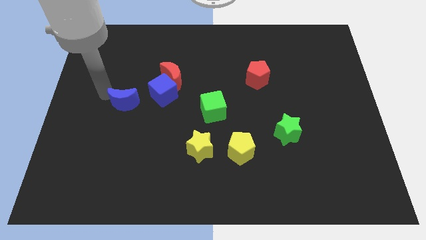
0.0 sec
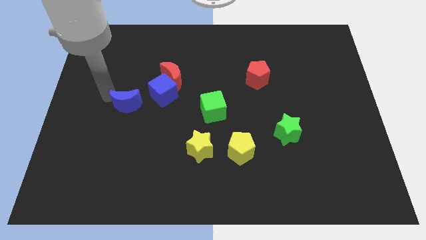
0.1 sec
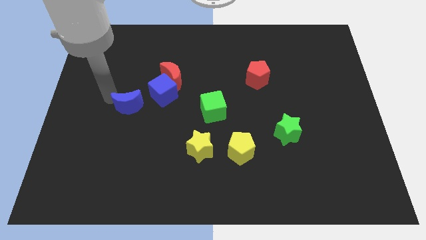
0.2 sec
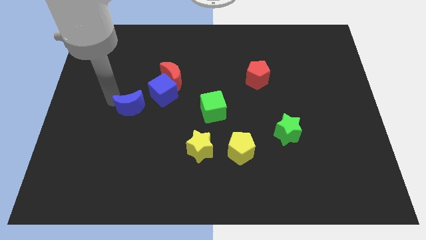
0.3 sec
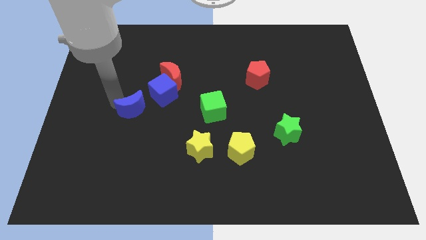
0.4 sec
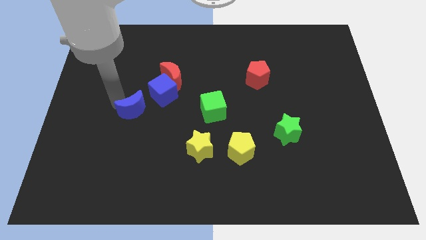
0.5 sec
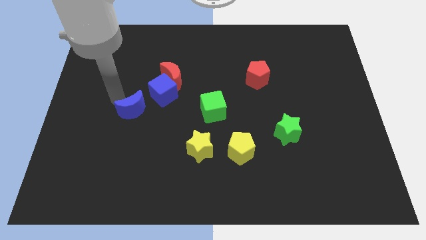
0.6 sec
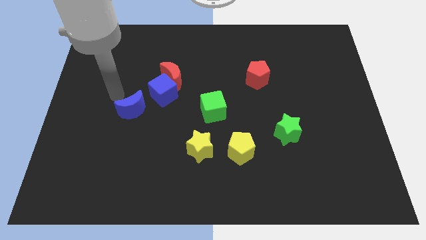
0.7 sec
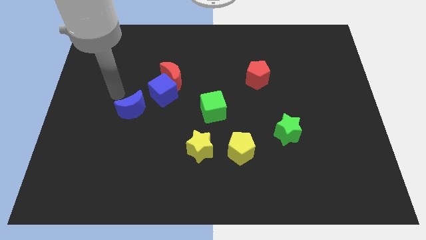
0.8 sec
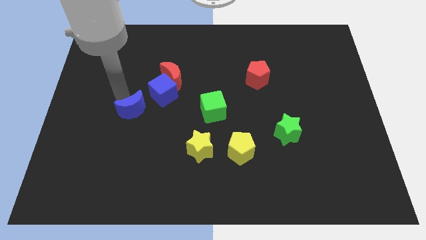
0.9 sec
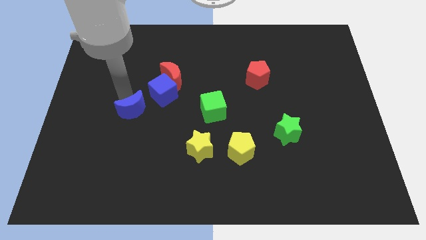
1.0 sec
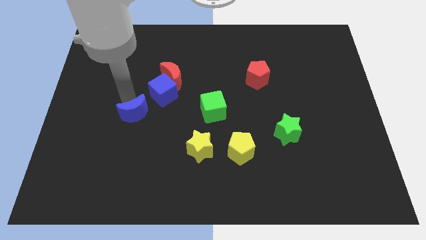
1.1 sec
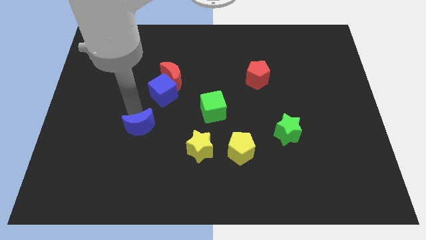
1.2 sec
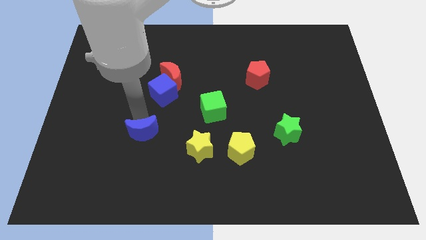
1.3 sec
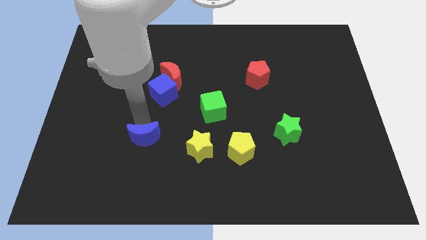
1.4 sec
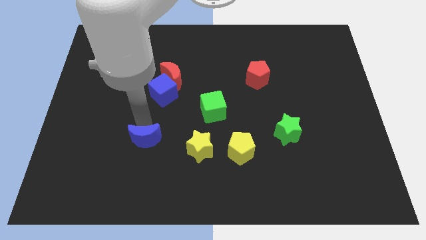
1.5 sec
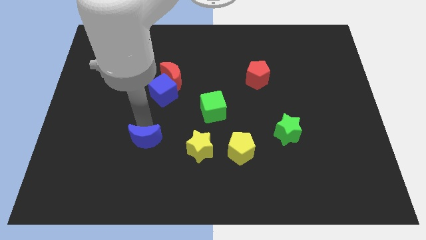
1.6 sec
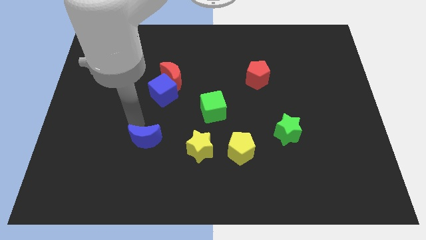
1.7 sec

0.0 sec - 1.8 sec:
move the blue crescent to the bottom of the blue cube

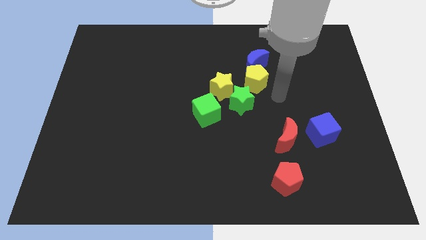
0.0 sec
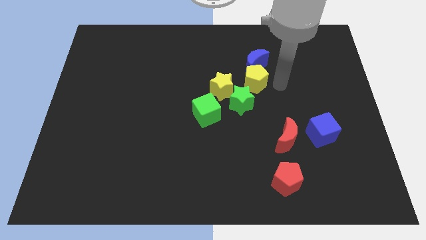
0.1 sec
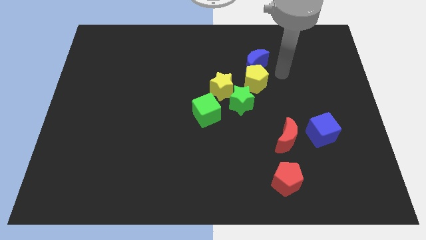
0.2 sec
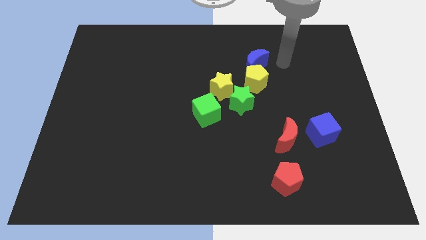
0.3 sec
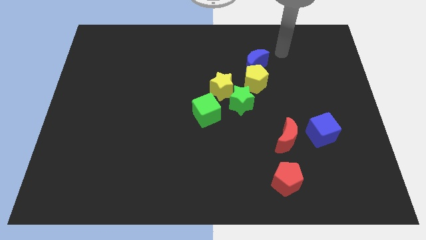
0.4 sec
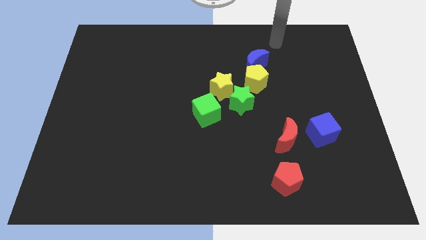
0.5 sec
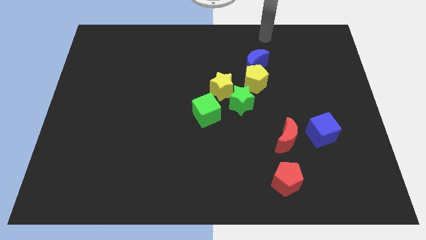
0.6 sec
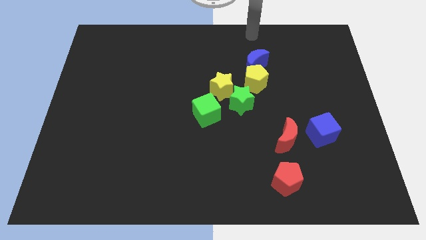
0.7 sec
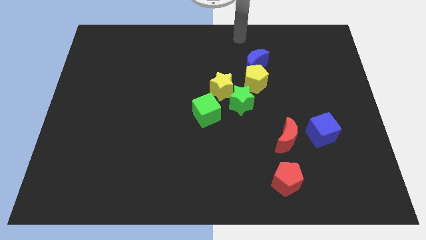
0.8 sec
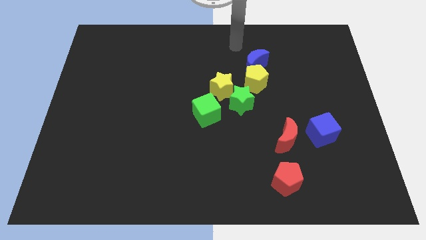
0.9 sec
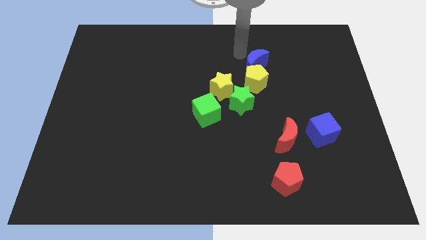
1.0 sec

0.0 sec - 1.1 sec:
put your arm at the top left side of blue crescent

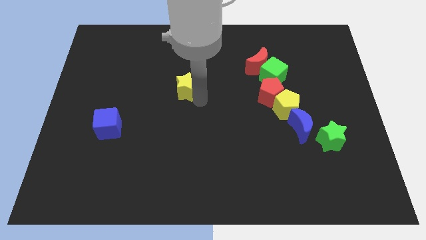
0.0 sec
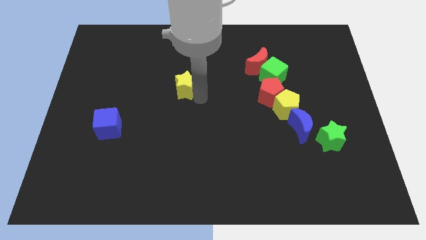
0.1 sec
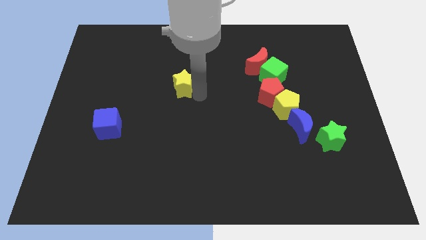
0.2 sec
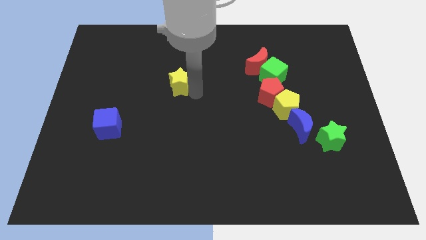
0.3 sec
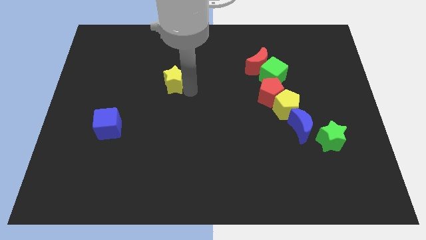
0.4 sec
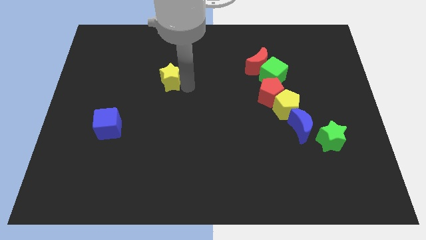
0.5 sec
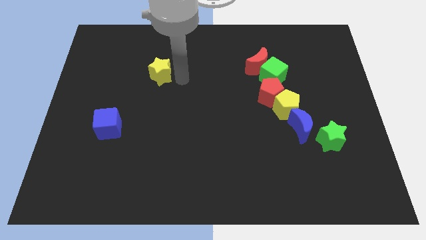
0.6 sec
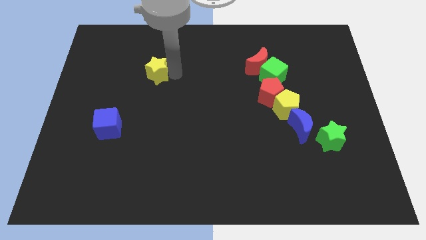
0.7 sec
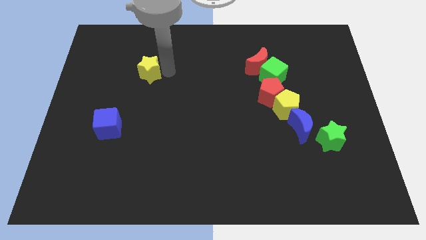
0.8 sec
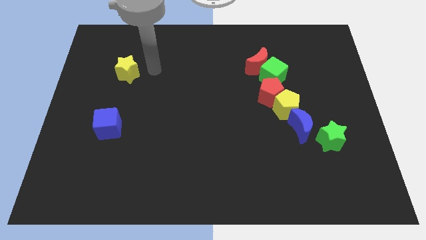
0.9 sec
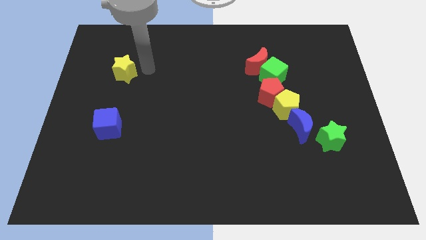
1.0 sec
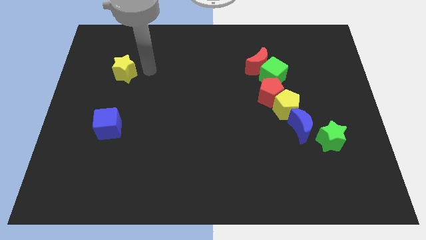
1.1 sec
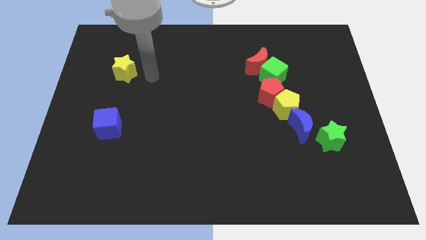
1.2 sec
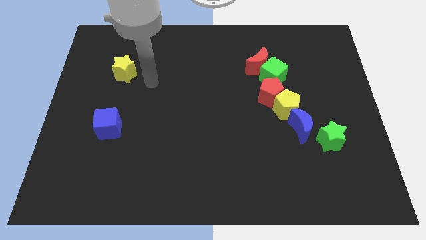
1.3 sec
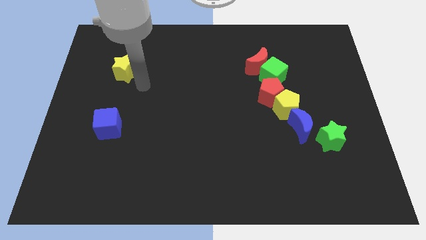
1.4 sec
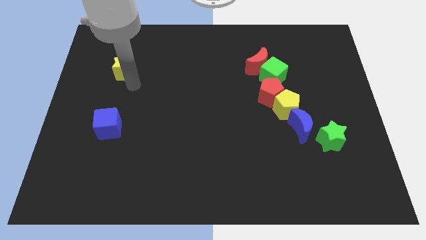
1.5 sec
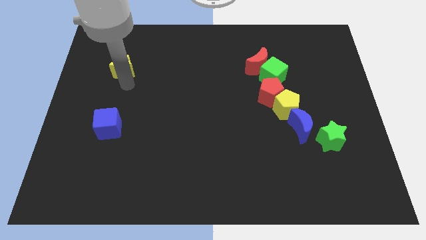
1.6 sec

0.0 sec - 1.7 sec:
put the yellow star vertically above the blue cube

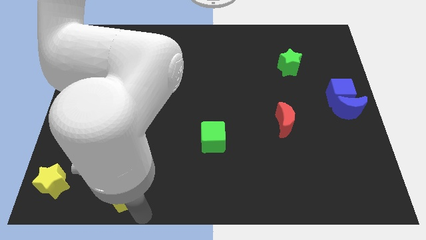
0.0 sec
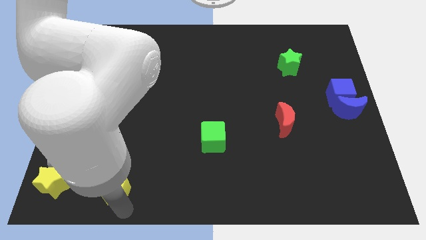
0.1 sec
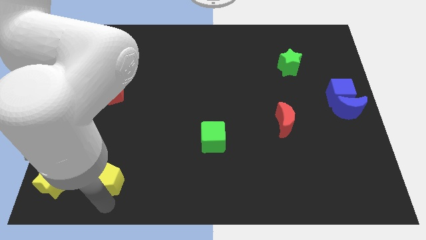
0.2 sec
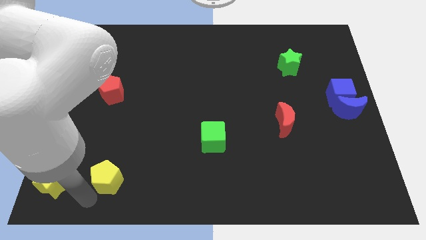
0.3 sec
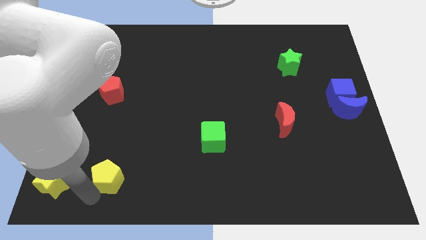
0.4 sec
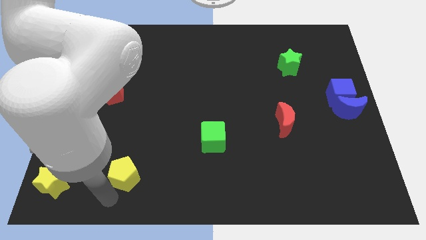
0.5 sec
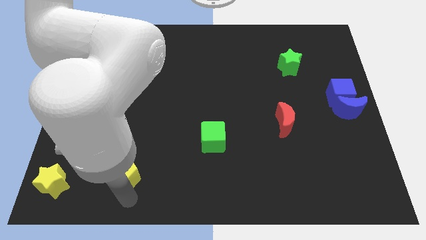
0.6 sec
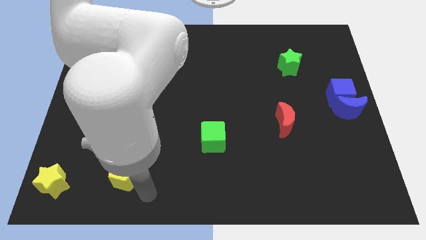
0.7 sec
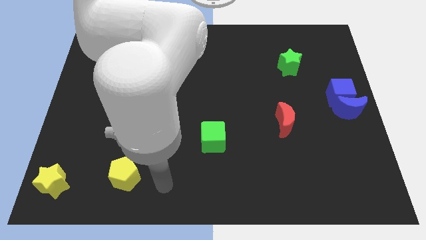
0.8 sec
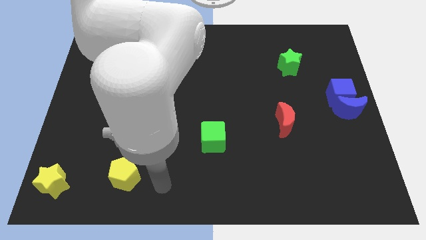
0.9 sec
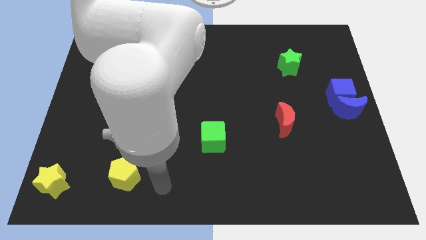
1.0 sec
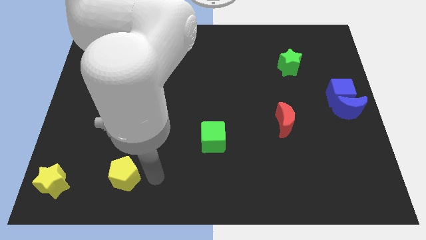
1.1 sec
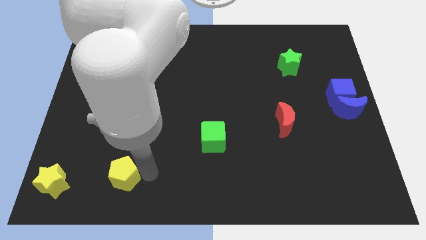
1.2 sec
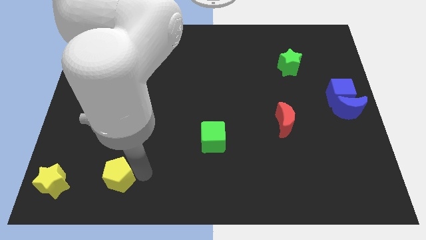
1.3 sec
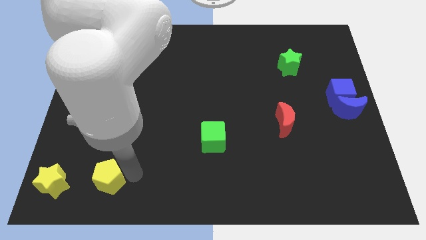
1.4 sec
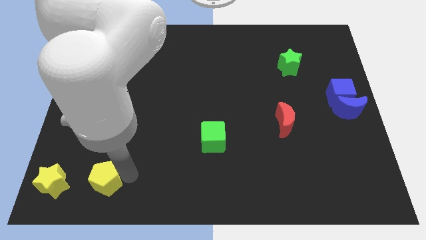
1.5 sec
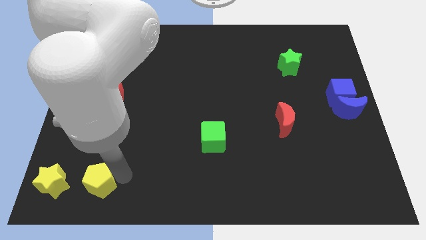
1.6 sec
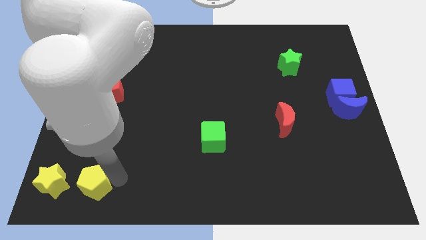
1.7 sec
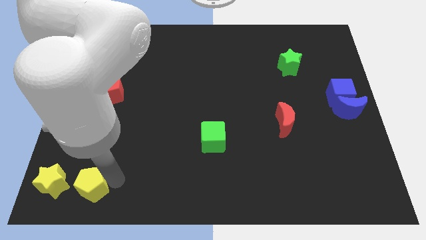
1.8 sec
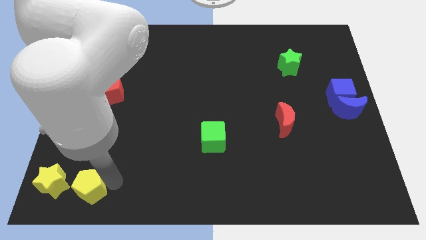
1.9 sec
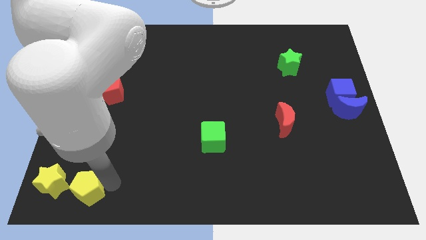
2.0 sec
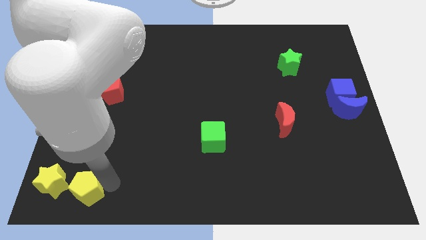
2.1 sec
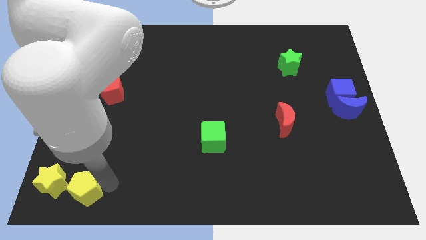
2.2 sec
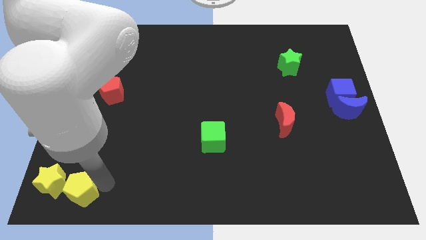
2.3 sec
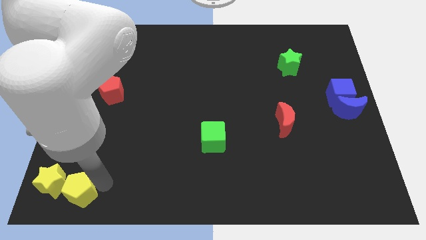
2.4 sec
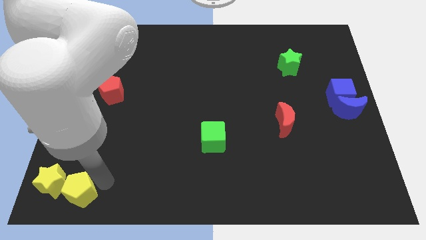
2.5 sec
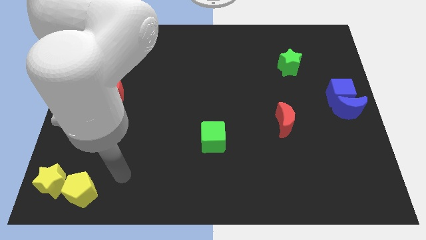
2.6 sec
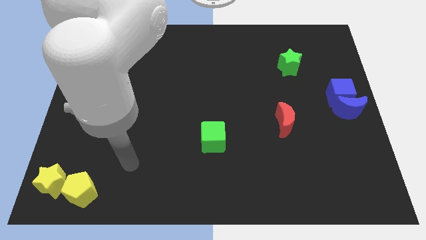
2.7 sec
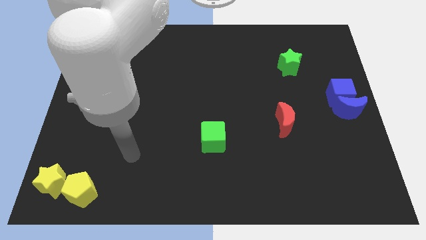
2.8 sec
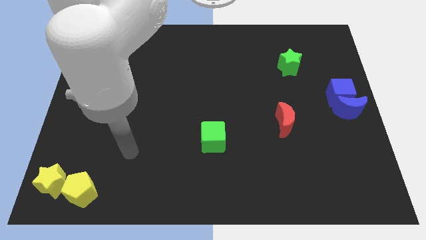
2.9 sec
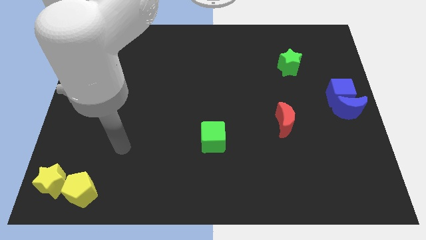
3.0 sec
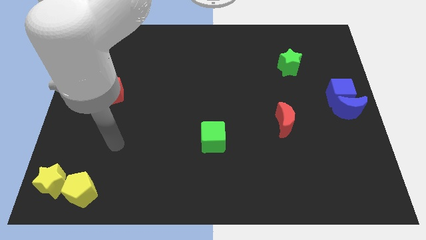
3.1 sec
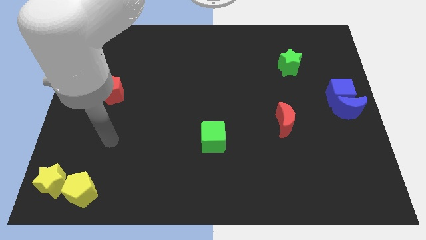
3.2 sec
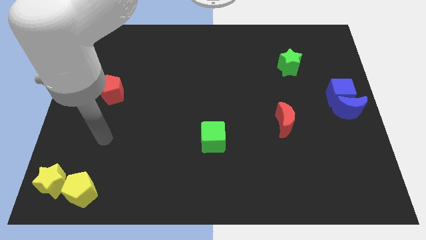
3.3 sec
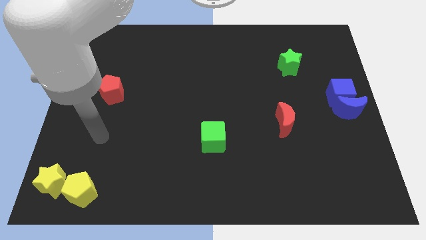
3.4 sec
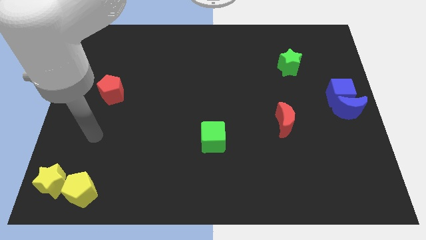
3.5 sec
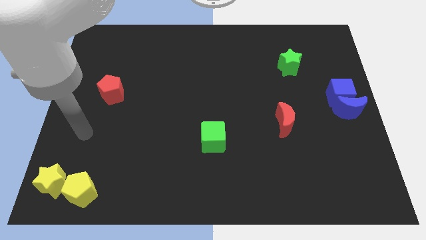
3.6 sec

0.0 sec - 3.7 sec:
place yellow pentagon to the right of yellow star

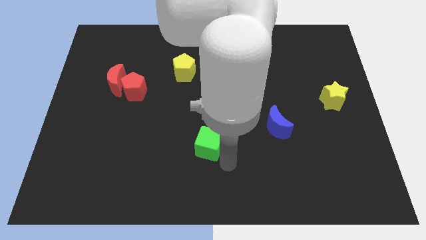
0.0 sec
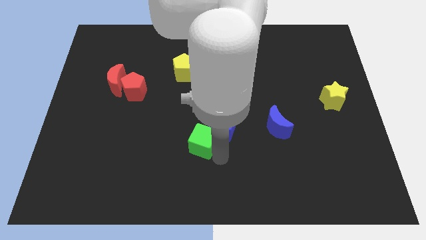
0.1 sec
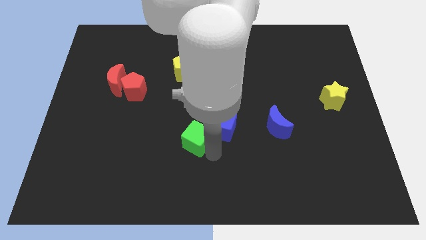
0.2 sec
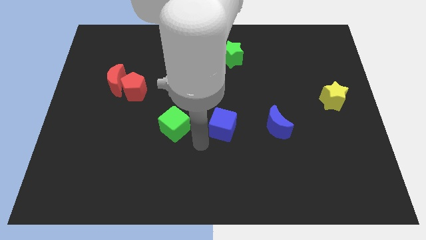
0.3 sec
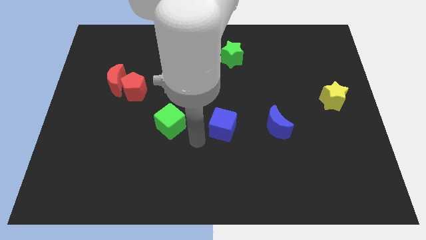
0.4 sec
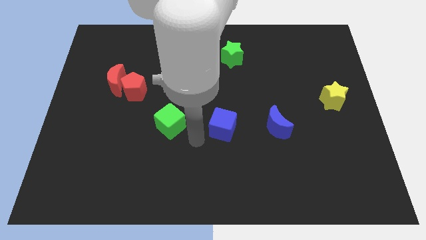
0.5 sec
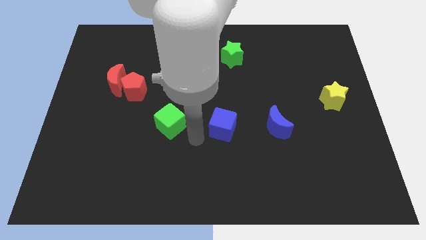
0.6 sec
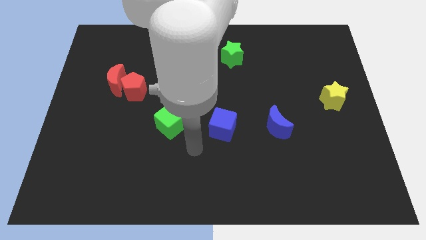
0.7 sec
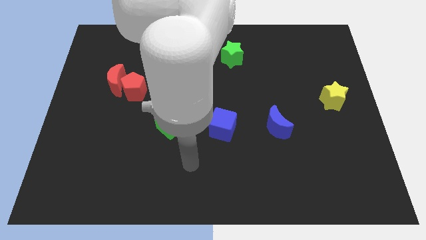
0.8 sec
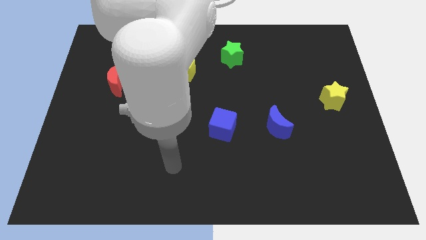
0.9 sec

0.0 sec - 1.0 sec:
push green cube slightly upwards
